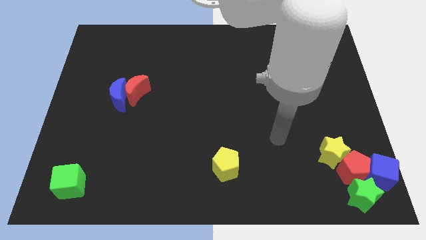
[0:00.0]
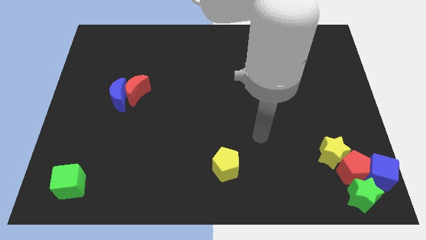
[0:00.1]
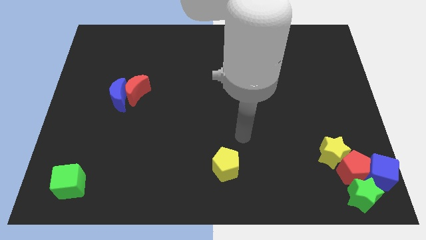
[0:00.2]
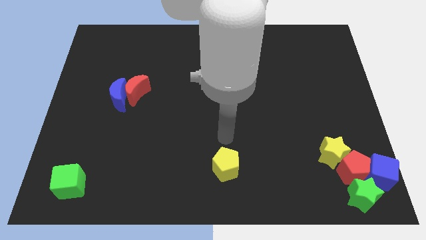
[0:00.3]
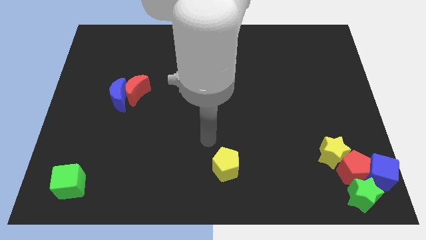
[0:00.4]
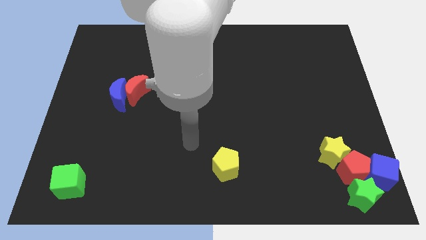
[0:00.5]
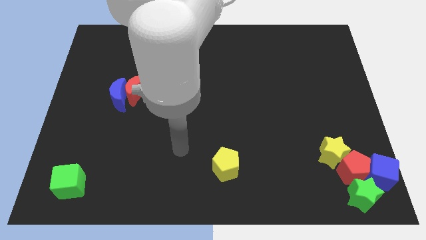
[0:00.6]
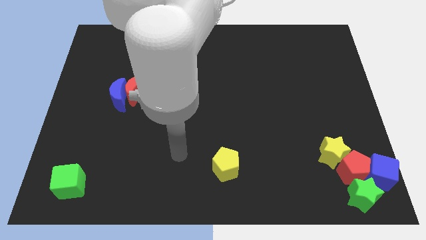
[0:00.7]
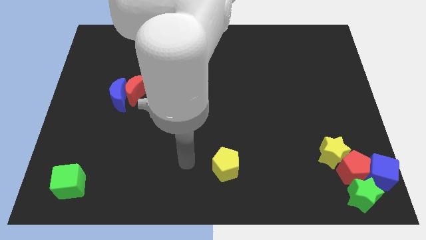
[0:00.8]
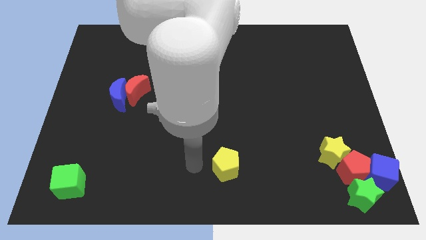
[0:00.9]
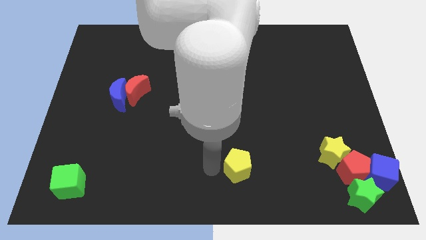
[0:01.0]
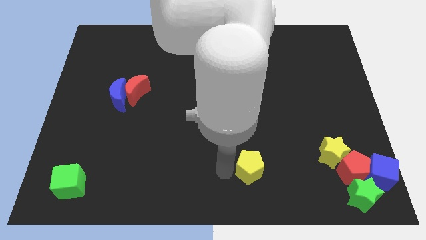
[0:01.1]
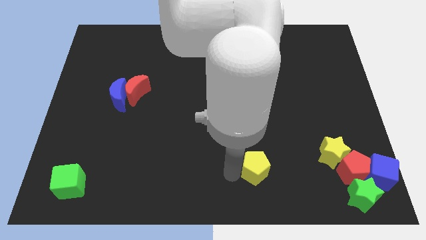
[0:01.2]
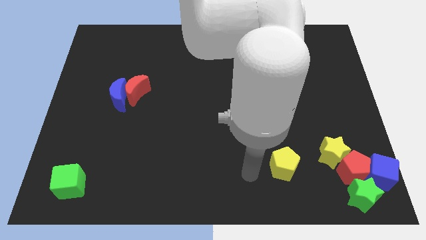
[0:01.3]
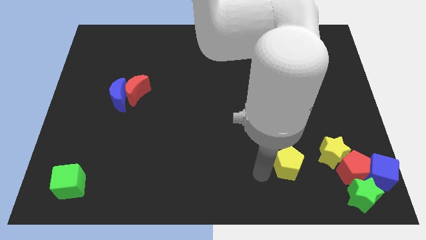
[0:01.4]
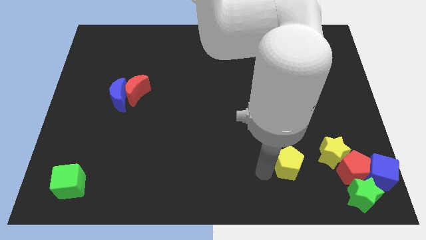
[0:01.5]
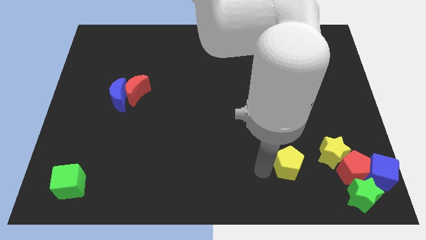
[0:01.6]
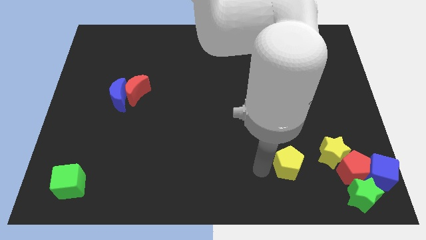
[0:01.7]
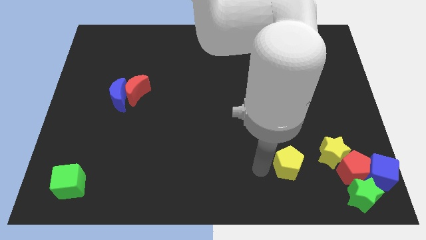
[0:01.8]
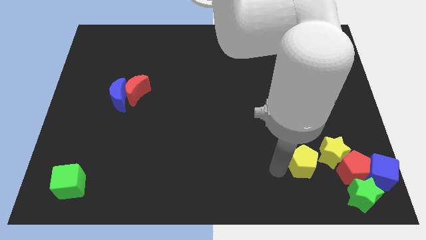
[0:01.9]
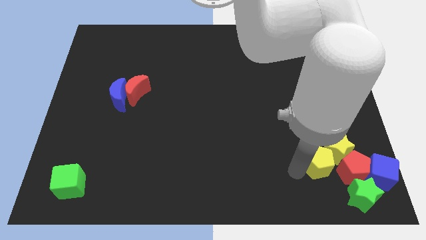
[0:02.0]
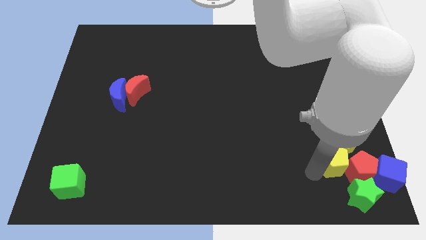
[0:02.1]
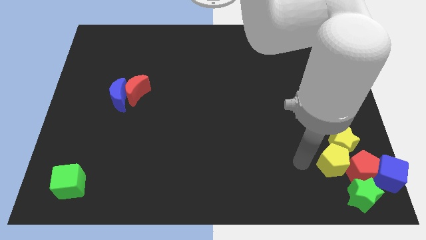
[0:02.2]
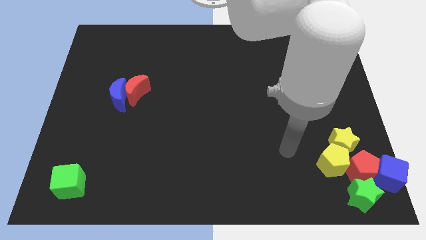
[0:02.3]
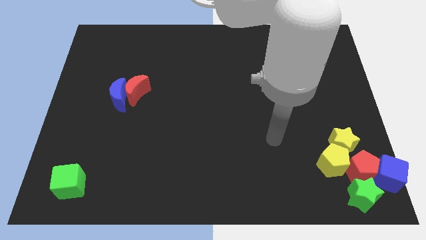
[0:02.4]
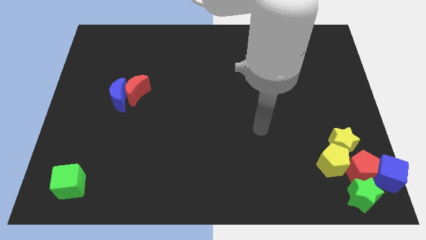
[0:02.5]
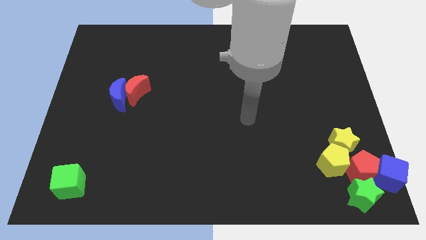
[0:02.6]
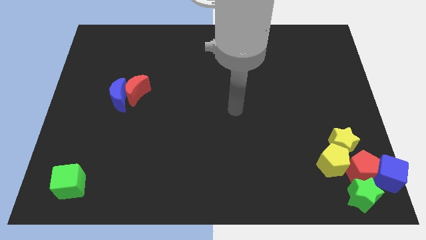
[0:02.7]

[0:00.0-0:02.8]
move the yellow pentagon into yellow star

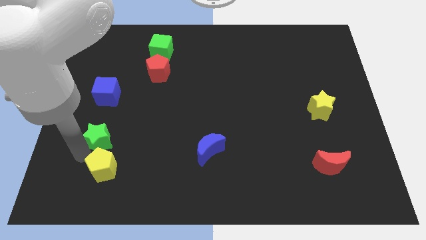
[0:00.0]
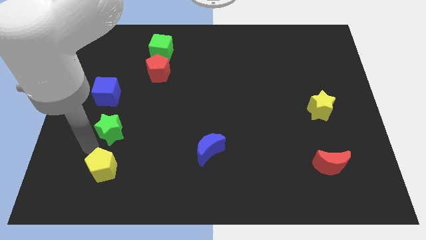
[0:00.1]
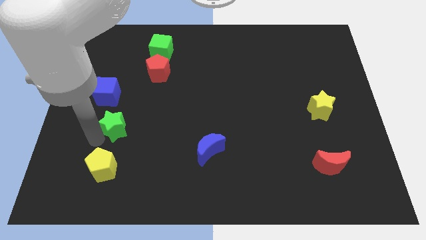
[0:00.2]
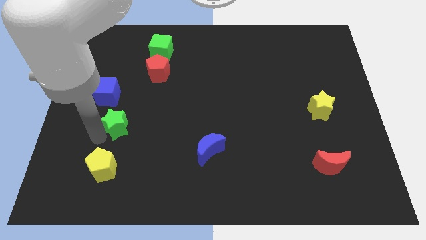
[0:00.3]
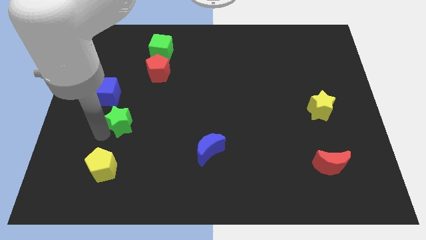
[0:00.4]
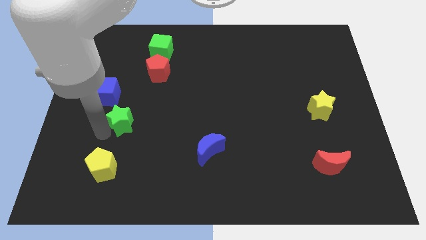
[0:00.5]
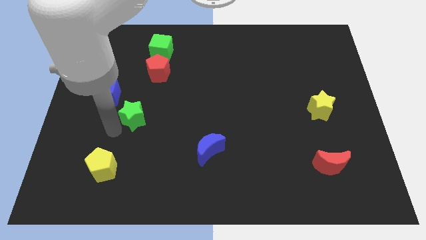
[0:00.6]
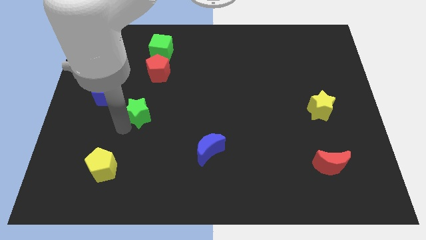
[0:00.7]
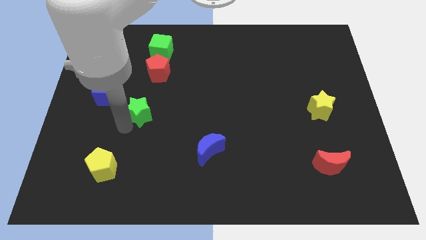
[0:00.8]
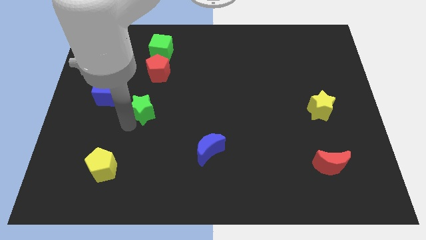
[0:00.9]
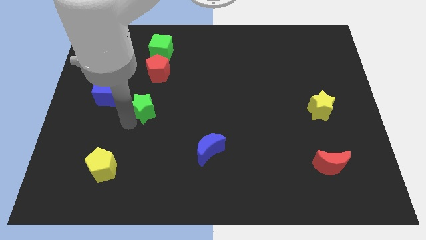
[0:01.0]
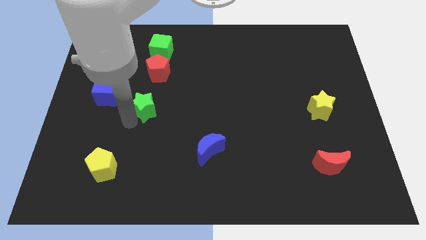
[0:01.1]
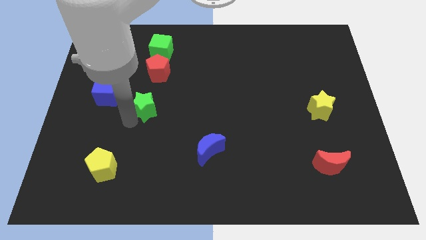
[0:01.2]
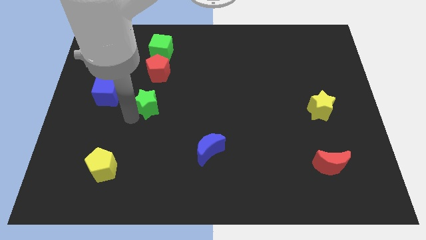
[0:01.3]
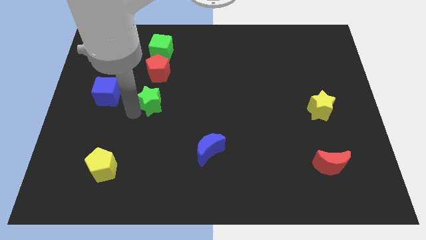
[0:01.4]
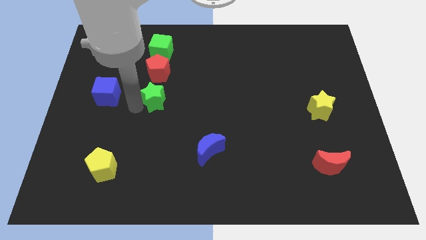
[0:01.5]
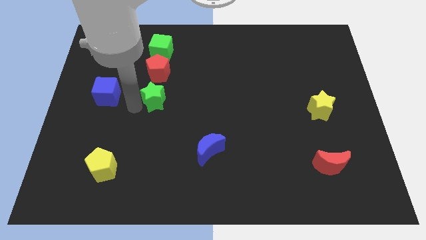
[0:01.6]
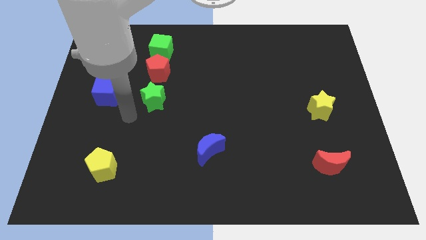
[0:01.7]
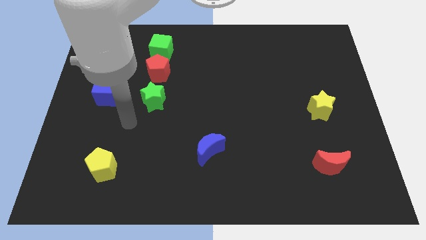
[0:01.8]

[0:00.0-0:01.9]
place green star to the right of blue cube

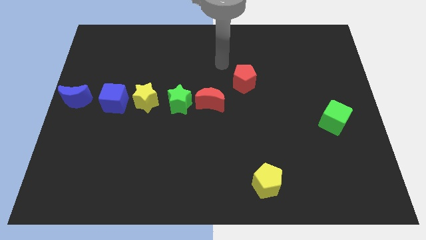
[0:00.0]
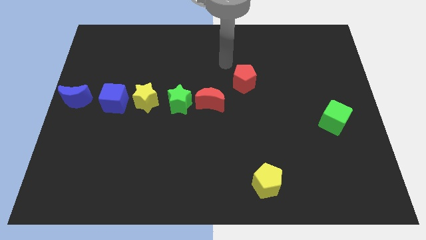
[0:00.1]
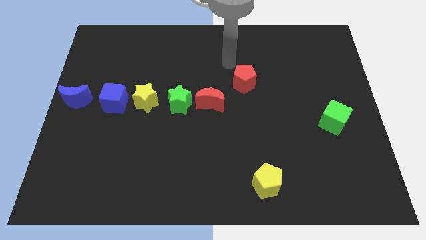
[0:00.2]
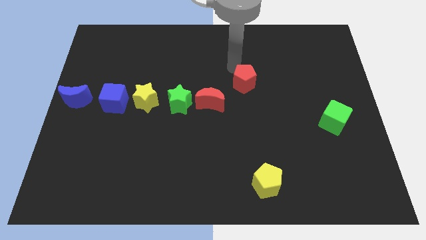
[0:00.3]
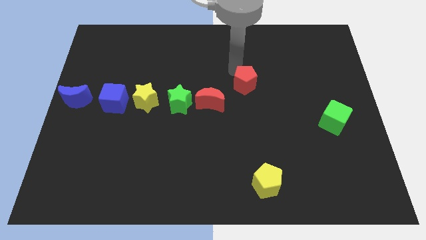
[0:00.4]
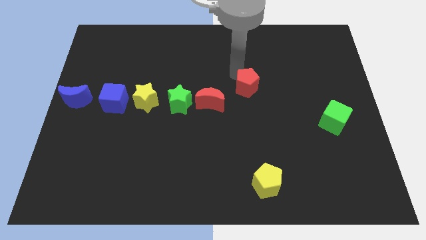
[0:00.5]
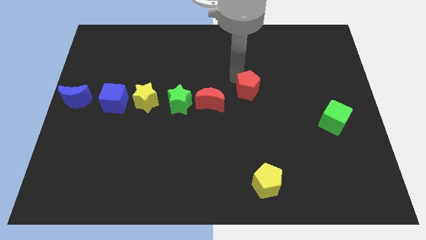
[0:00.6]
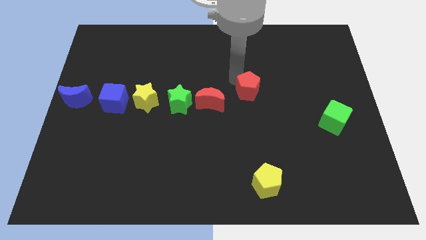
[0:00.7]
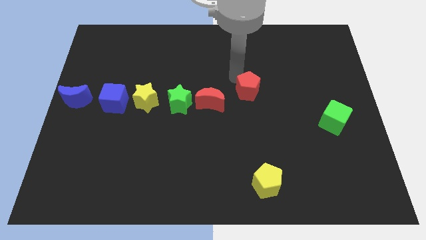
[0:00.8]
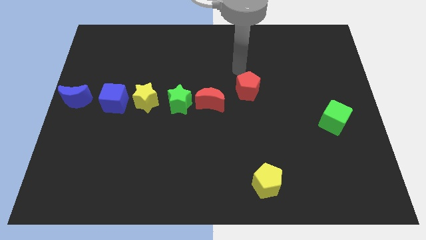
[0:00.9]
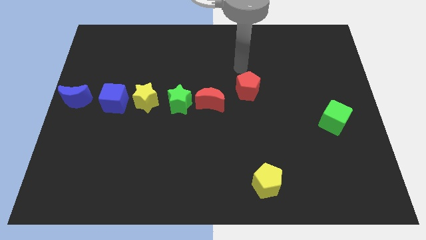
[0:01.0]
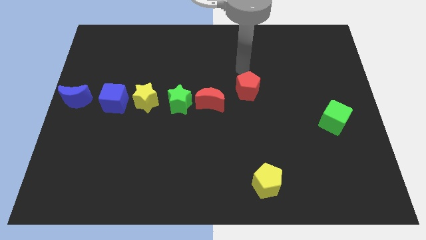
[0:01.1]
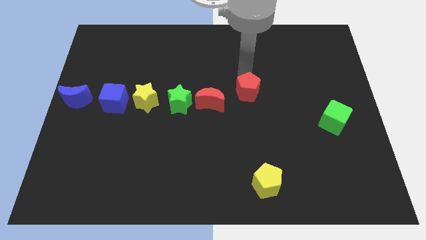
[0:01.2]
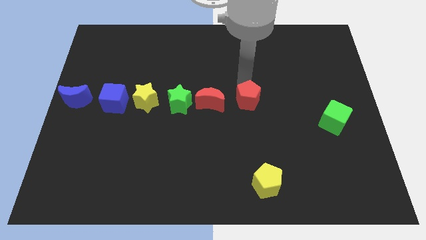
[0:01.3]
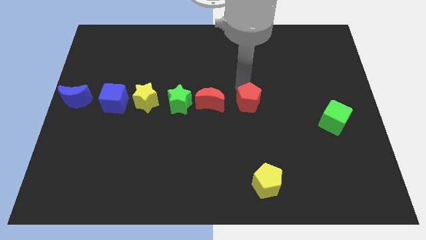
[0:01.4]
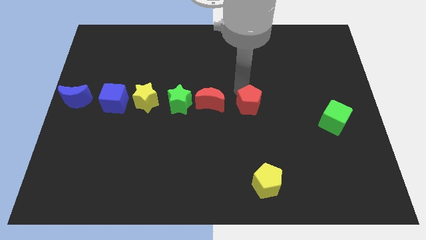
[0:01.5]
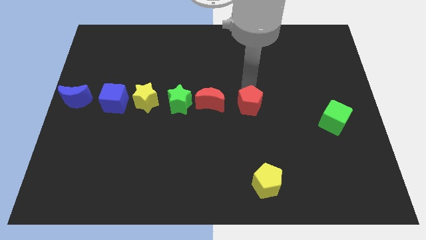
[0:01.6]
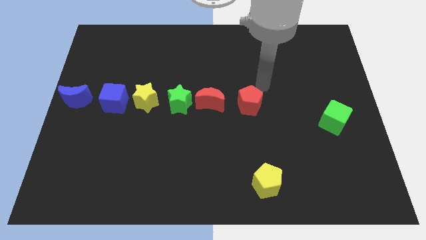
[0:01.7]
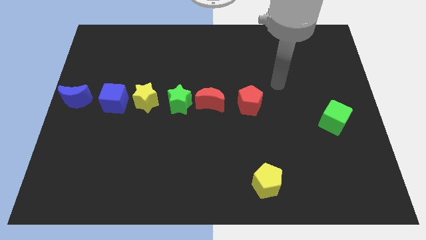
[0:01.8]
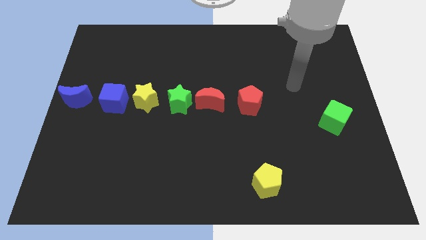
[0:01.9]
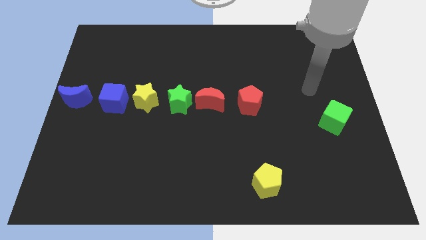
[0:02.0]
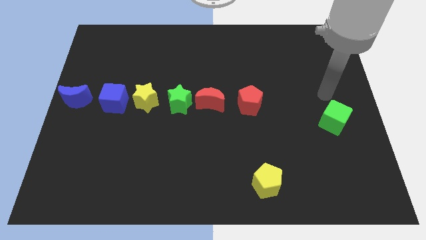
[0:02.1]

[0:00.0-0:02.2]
push the red pentagon on the right of the red crescent

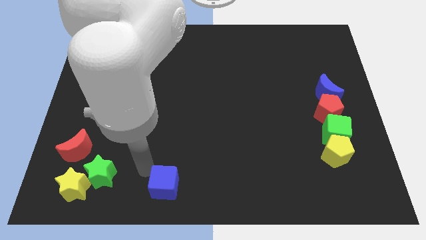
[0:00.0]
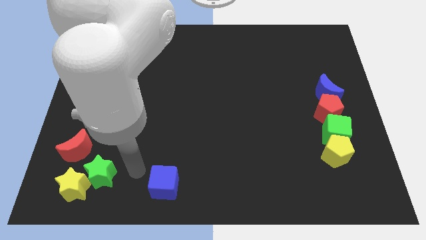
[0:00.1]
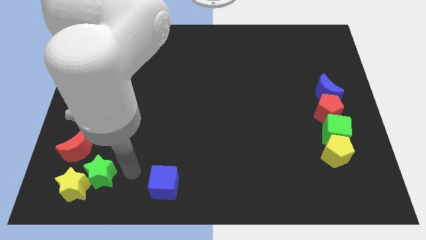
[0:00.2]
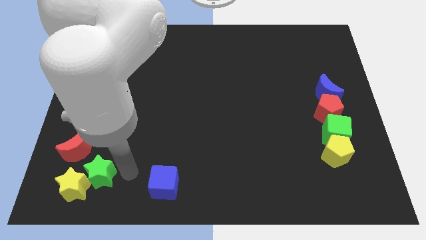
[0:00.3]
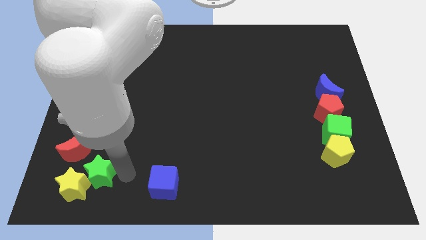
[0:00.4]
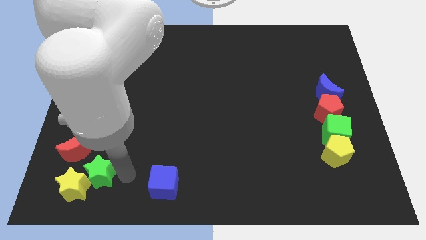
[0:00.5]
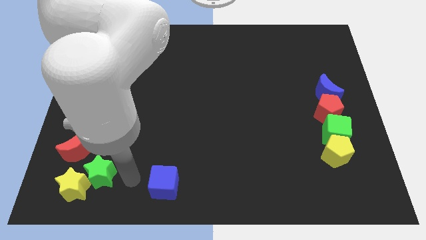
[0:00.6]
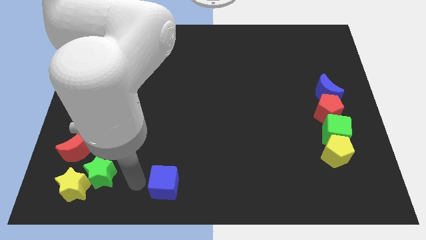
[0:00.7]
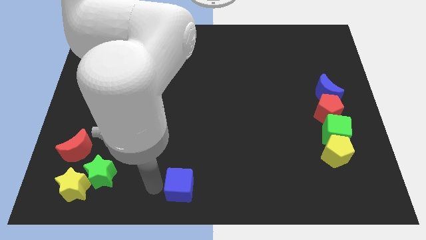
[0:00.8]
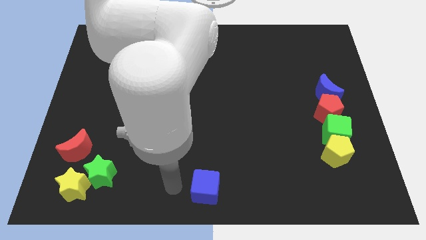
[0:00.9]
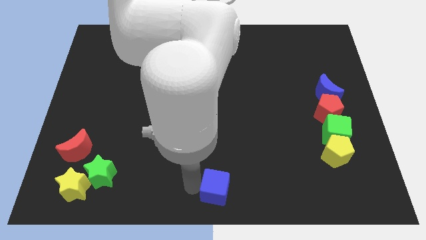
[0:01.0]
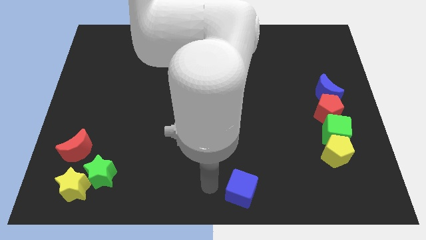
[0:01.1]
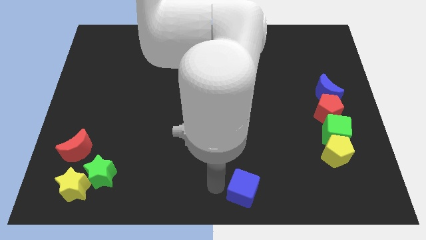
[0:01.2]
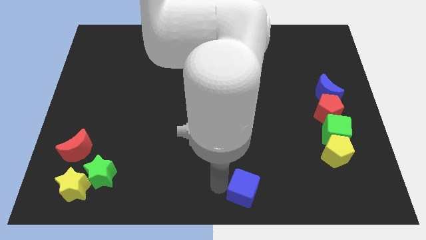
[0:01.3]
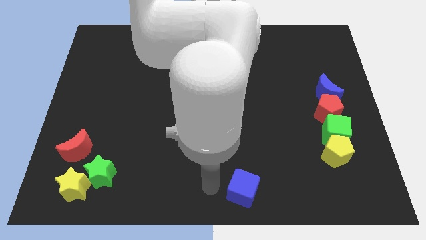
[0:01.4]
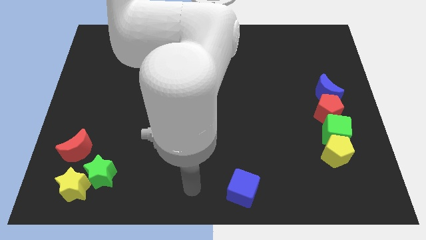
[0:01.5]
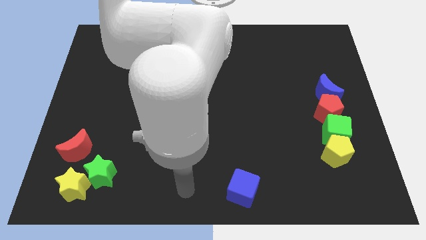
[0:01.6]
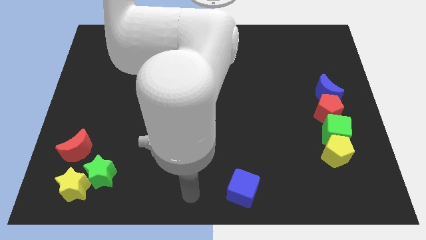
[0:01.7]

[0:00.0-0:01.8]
move the blue cube towards the right side

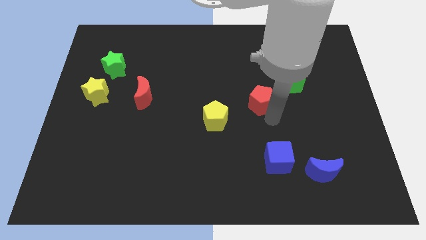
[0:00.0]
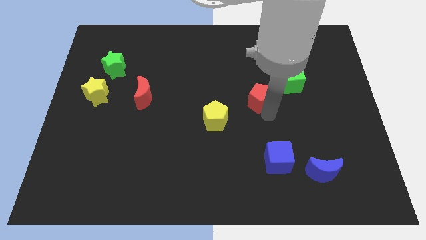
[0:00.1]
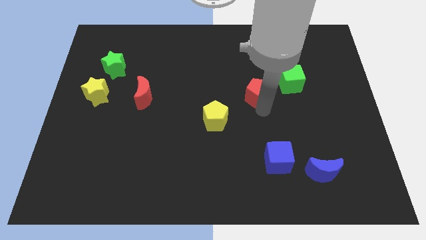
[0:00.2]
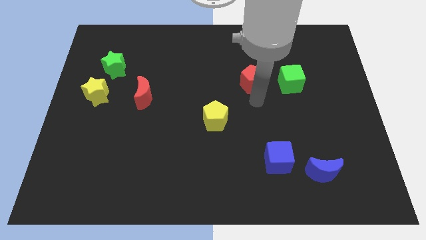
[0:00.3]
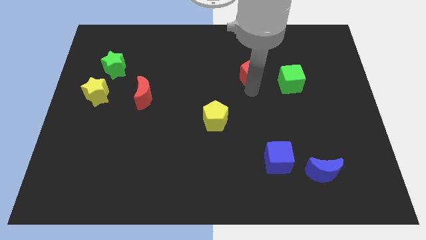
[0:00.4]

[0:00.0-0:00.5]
place red pentagon left to green cube
